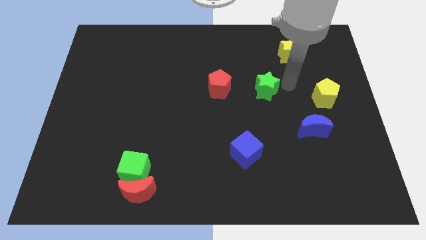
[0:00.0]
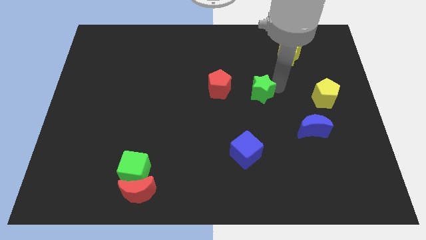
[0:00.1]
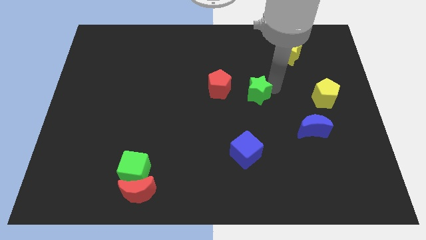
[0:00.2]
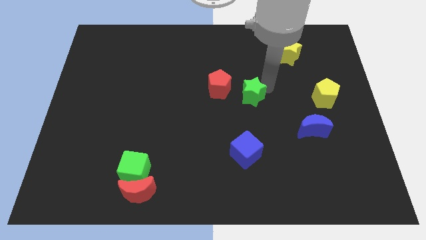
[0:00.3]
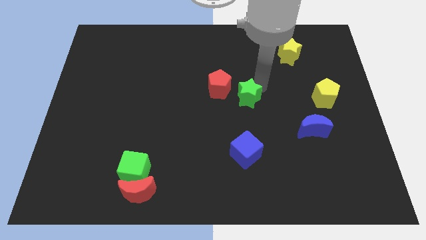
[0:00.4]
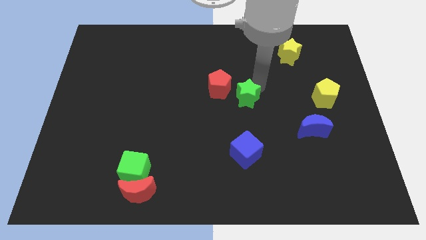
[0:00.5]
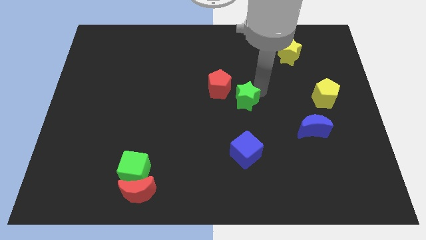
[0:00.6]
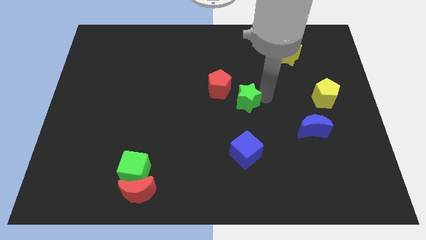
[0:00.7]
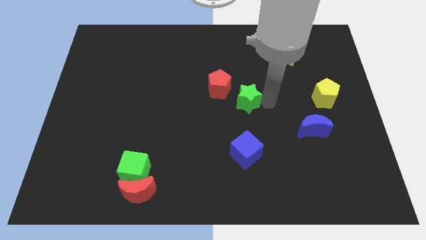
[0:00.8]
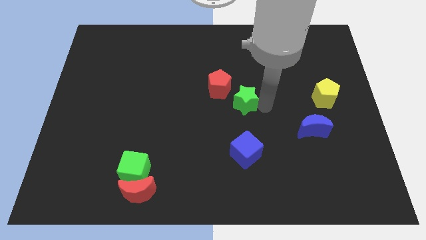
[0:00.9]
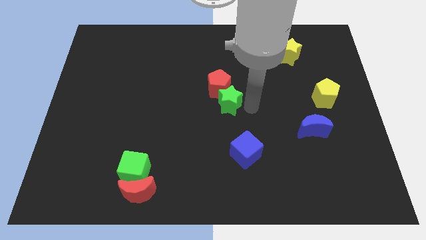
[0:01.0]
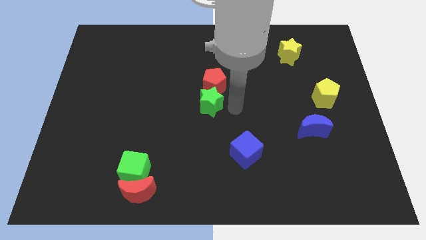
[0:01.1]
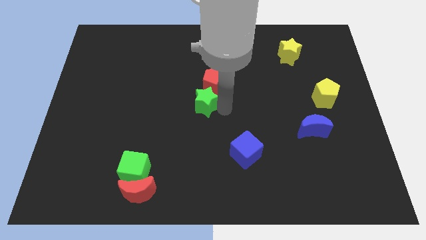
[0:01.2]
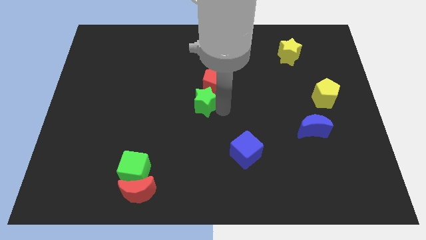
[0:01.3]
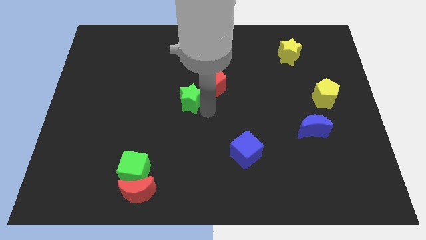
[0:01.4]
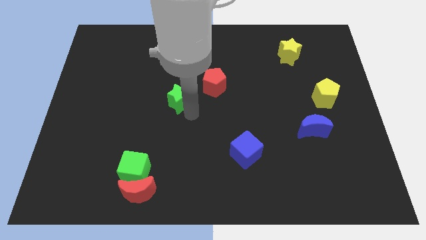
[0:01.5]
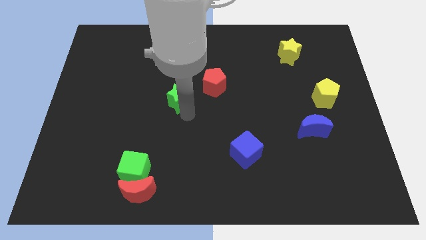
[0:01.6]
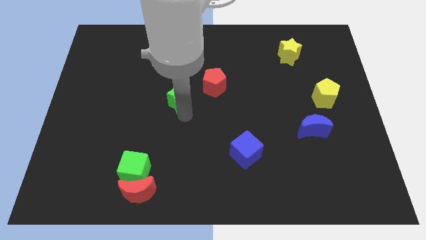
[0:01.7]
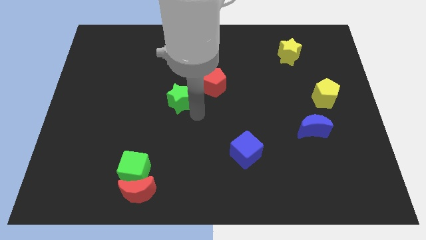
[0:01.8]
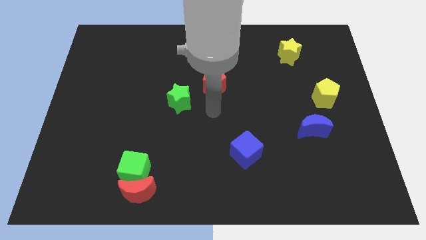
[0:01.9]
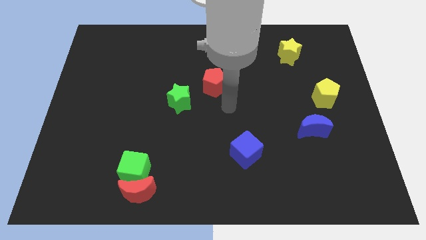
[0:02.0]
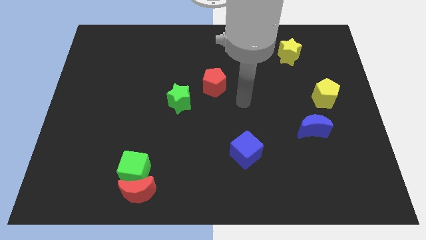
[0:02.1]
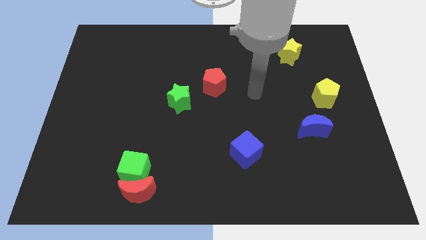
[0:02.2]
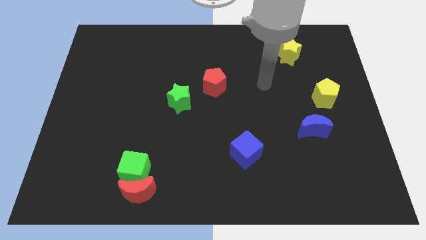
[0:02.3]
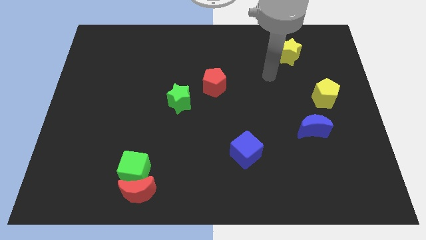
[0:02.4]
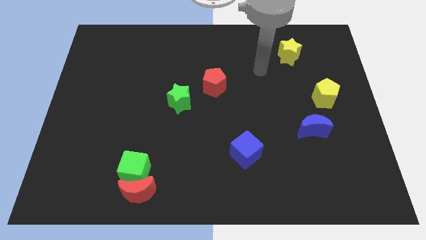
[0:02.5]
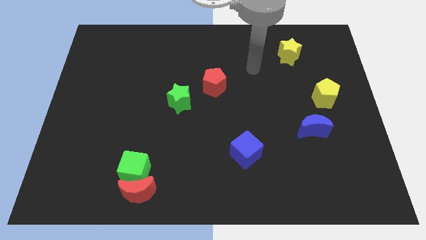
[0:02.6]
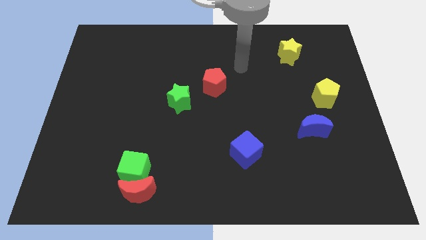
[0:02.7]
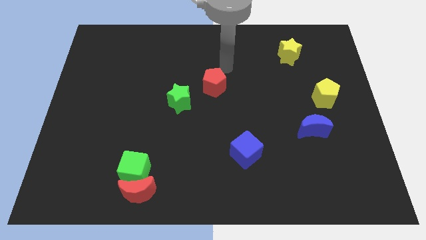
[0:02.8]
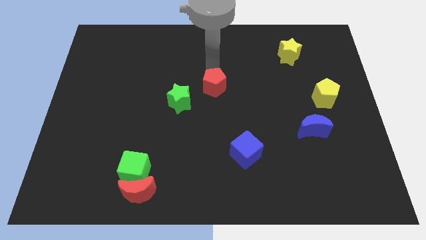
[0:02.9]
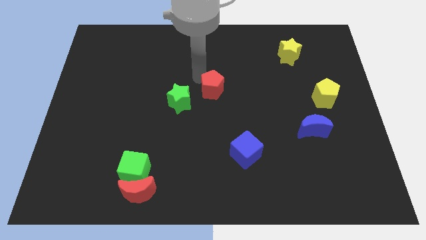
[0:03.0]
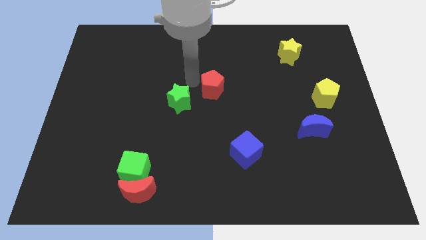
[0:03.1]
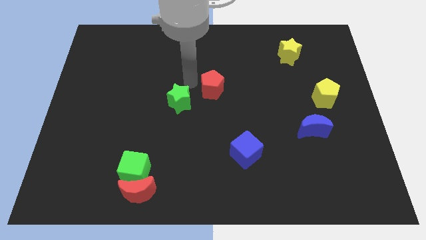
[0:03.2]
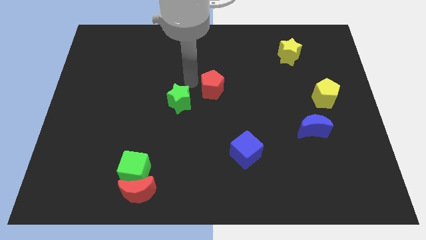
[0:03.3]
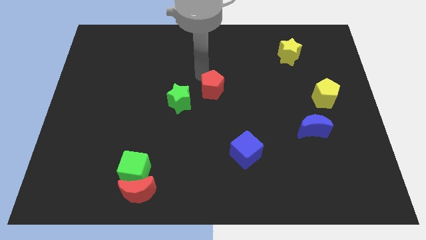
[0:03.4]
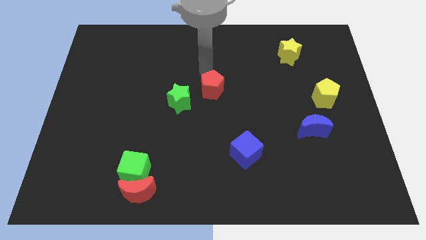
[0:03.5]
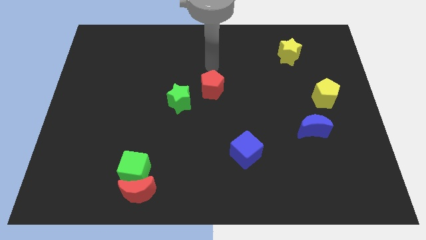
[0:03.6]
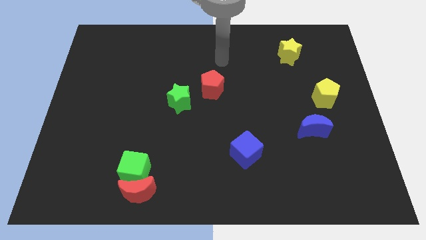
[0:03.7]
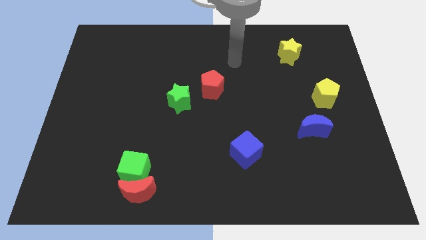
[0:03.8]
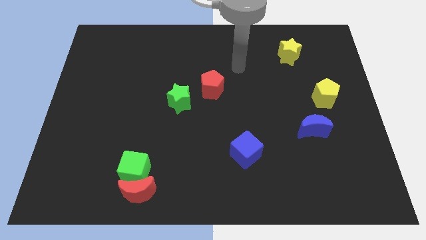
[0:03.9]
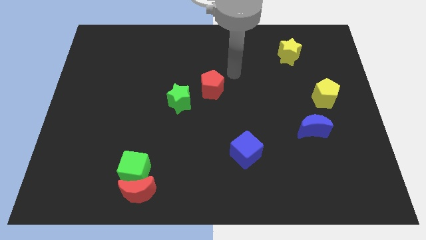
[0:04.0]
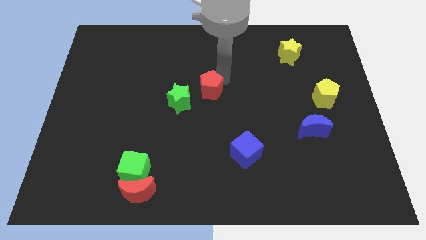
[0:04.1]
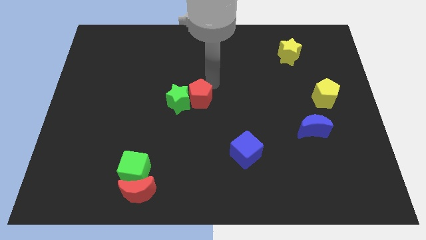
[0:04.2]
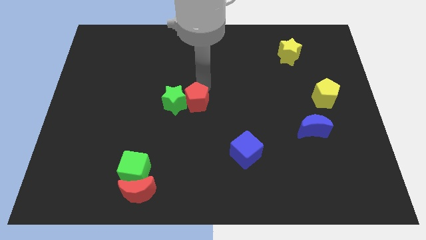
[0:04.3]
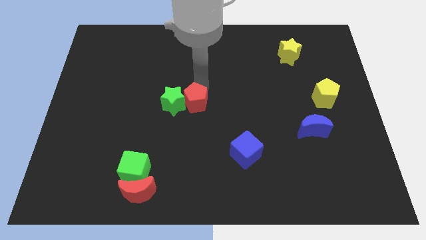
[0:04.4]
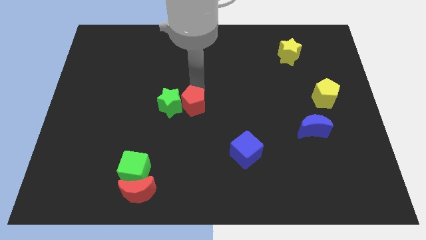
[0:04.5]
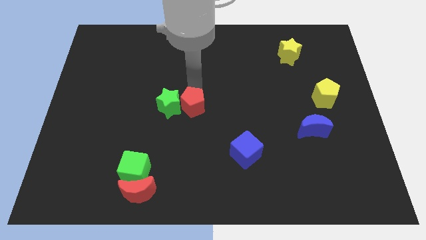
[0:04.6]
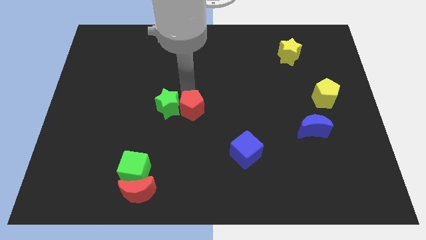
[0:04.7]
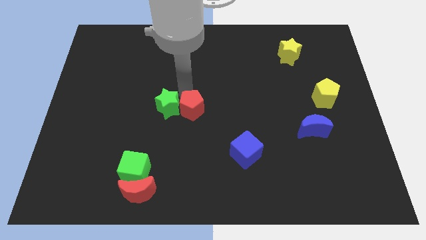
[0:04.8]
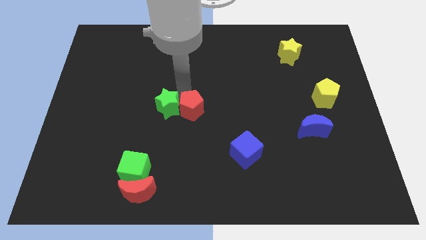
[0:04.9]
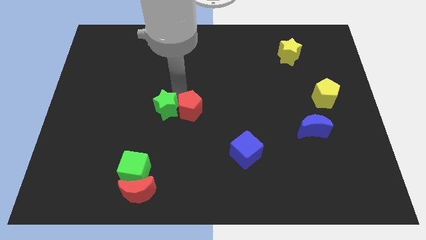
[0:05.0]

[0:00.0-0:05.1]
move red pentagon close to the green star

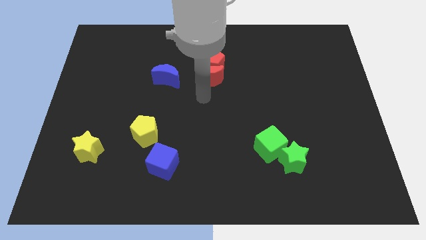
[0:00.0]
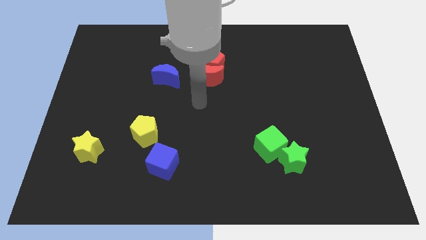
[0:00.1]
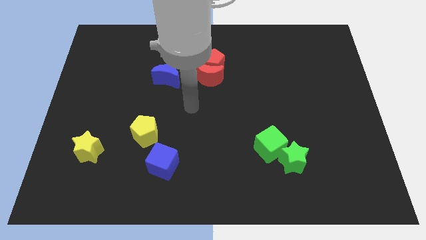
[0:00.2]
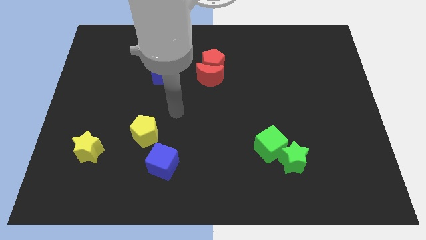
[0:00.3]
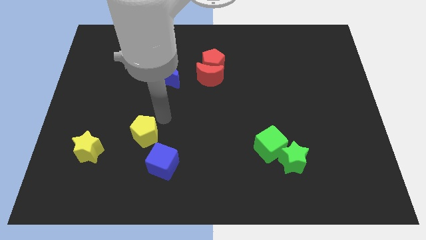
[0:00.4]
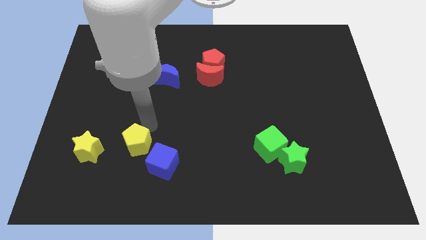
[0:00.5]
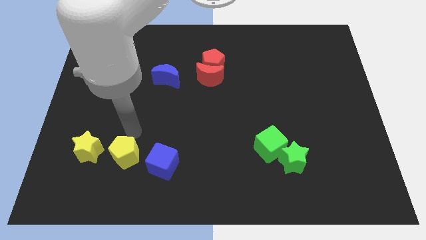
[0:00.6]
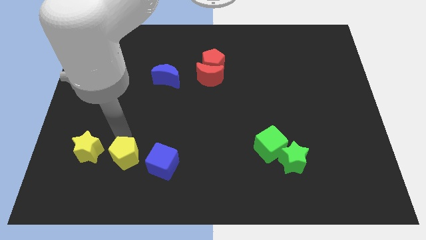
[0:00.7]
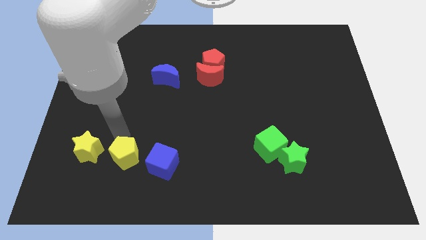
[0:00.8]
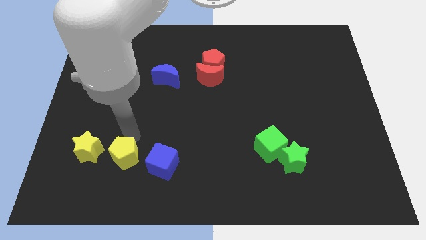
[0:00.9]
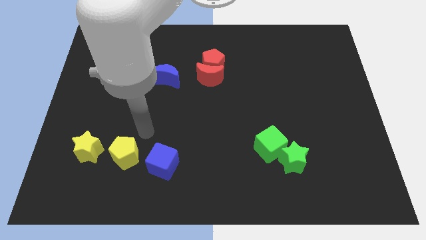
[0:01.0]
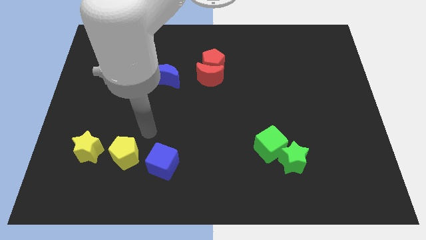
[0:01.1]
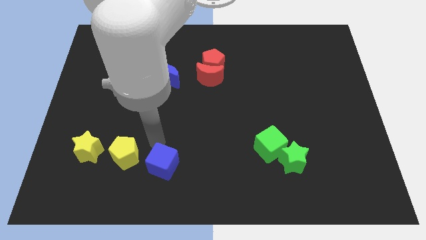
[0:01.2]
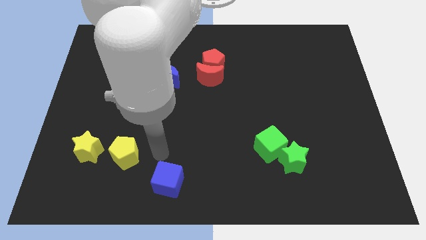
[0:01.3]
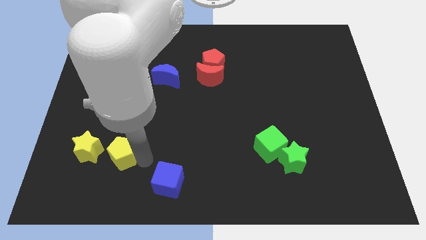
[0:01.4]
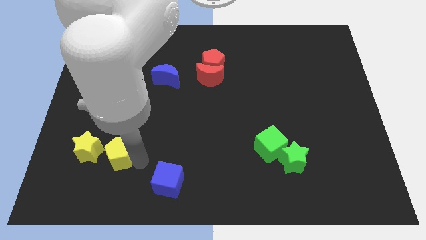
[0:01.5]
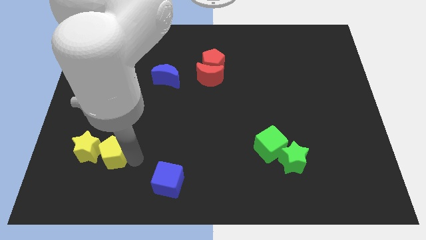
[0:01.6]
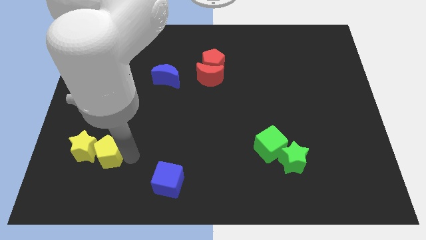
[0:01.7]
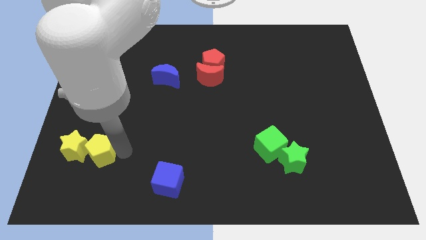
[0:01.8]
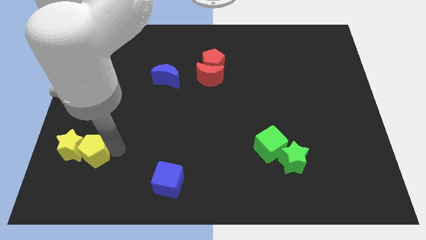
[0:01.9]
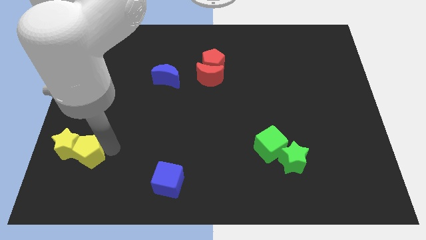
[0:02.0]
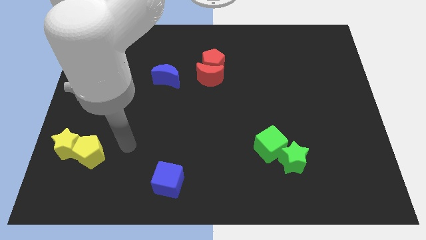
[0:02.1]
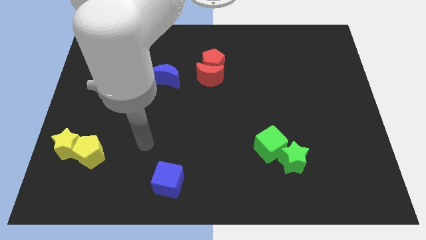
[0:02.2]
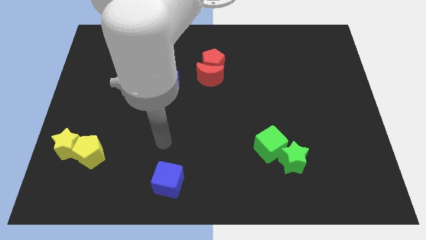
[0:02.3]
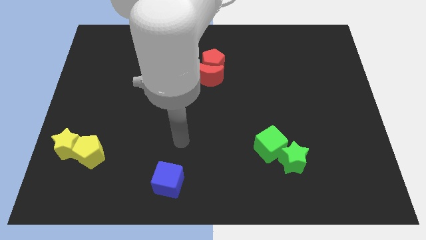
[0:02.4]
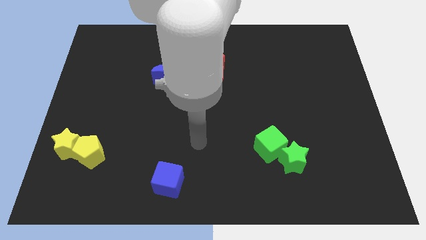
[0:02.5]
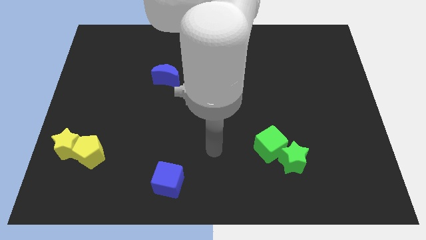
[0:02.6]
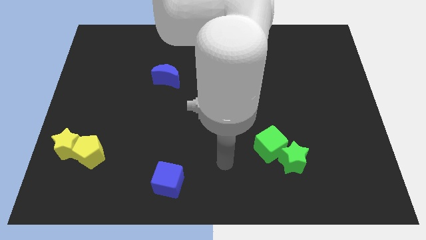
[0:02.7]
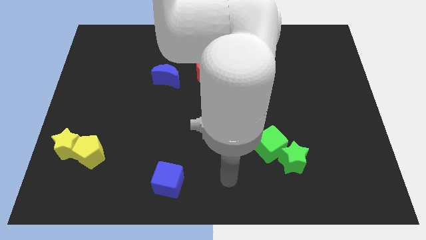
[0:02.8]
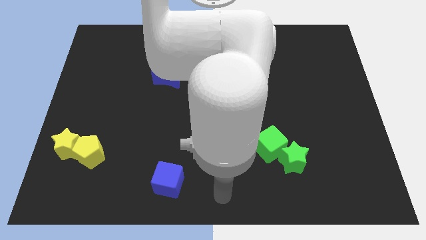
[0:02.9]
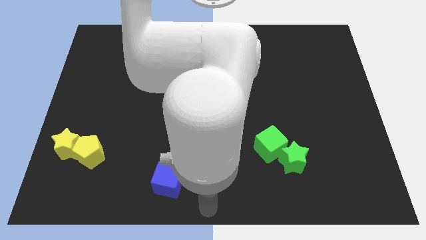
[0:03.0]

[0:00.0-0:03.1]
push the yellow blocks towards the left side

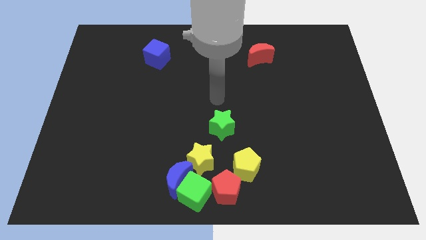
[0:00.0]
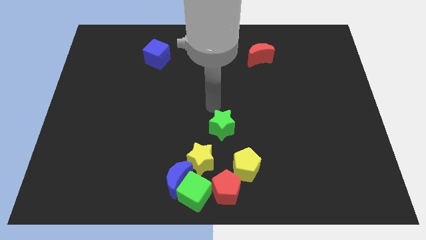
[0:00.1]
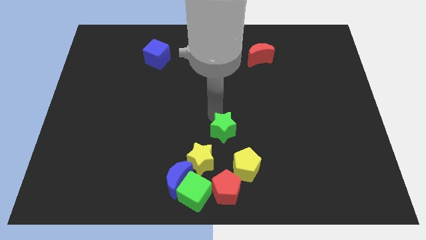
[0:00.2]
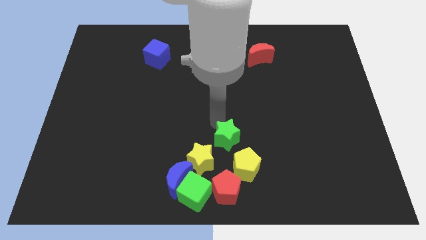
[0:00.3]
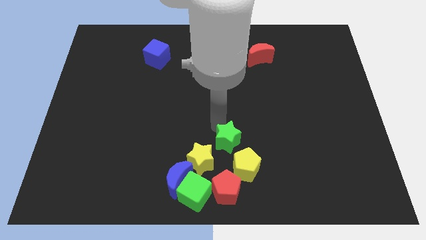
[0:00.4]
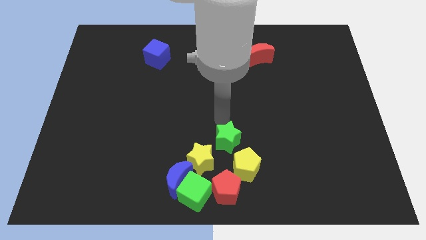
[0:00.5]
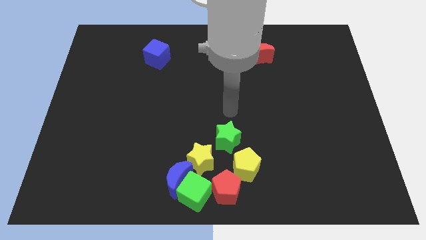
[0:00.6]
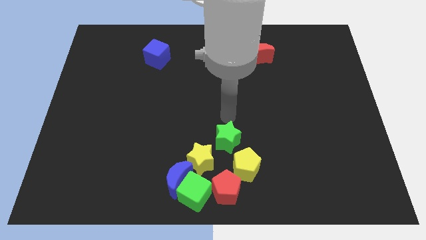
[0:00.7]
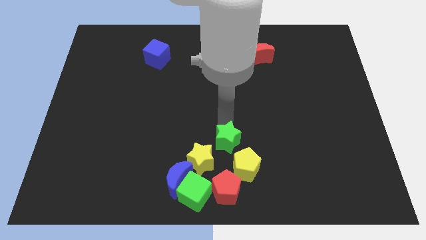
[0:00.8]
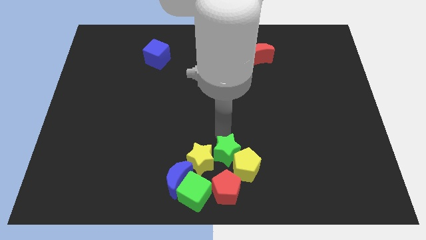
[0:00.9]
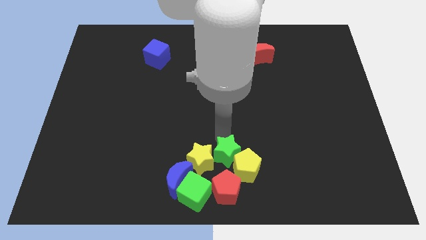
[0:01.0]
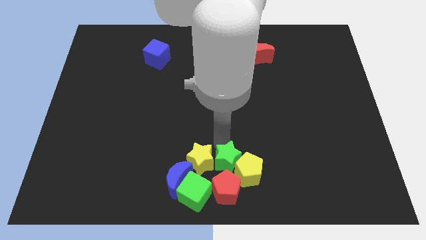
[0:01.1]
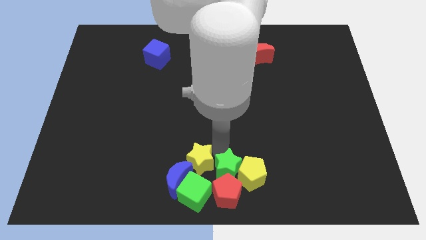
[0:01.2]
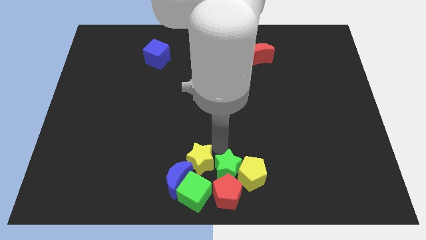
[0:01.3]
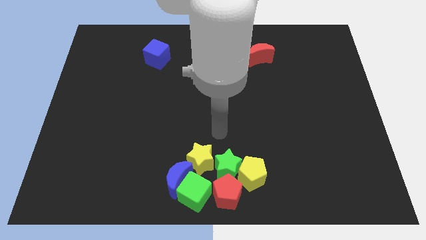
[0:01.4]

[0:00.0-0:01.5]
push the green star into the top of the red pentagon
